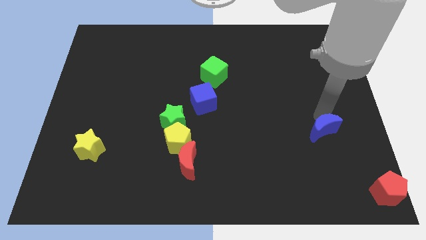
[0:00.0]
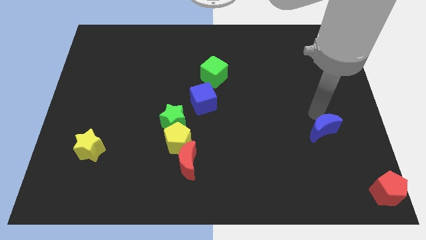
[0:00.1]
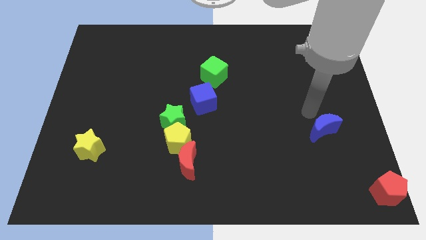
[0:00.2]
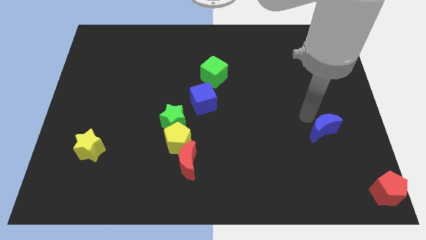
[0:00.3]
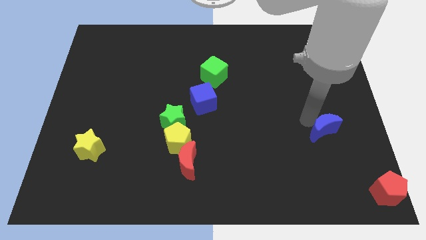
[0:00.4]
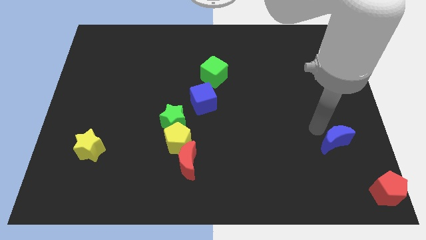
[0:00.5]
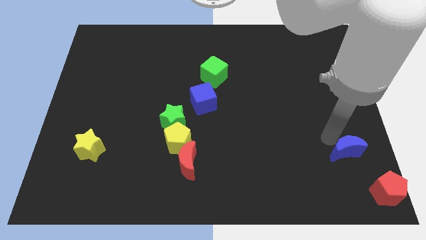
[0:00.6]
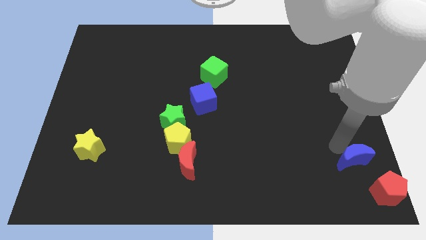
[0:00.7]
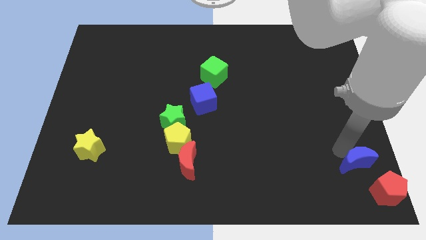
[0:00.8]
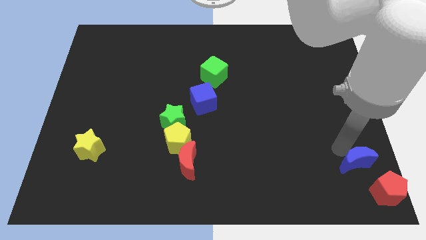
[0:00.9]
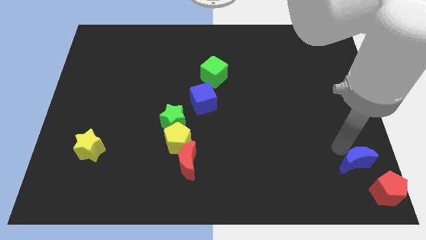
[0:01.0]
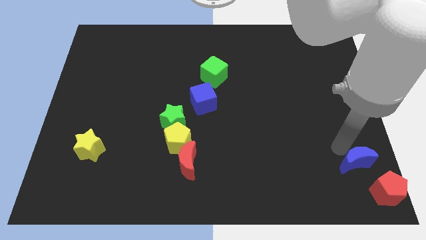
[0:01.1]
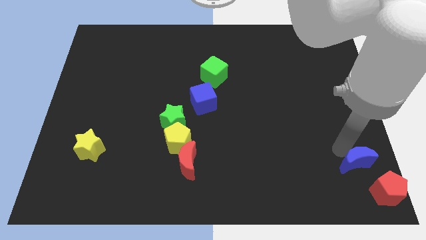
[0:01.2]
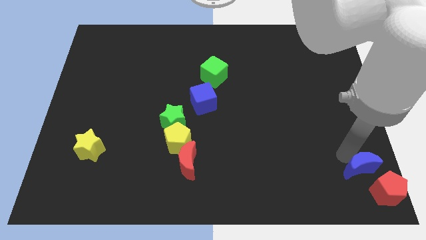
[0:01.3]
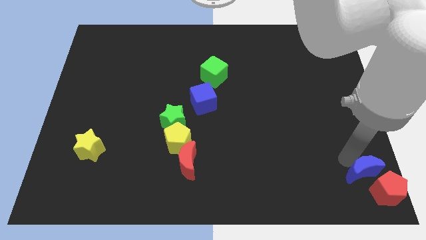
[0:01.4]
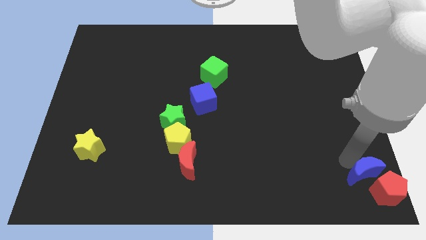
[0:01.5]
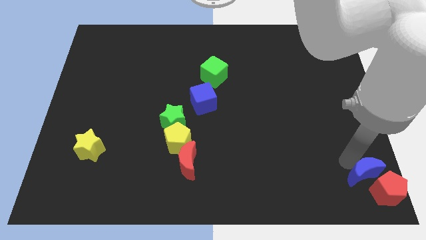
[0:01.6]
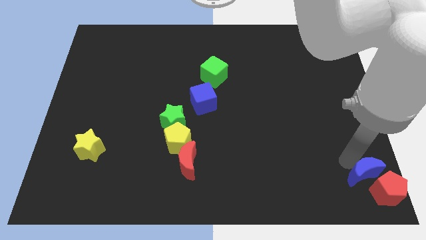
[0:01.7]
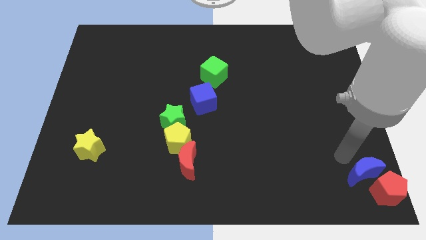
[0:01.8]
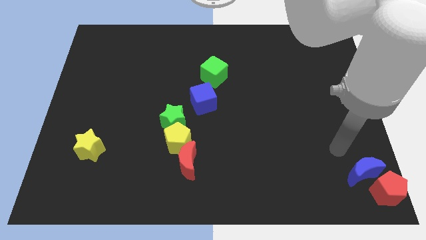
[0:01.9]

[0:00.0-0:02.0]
slide the blue moon close to the red pentagon

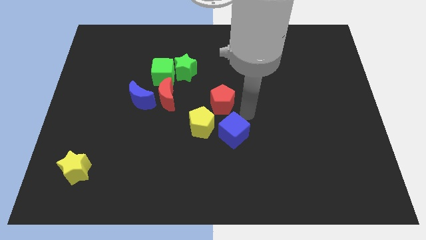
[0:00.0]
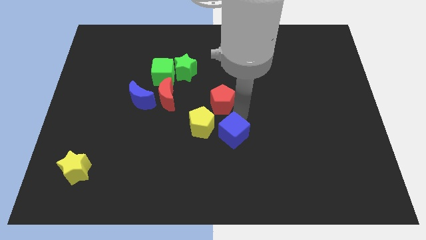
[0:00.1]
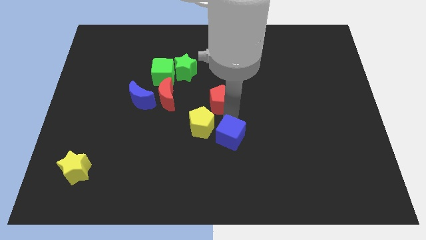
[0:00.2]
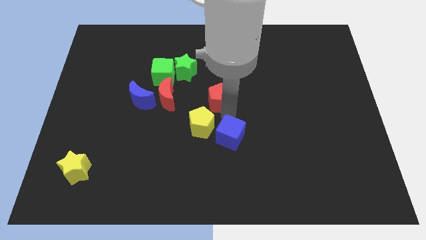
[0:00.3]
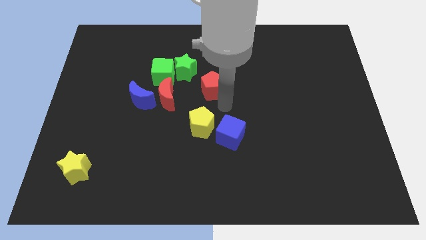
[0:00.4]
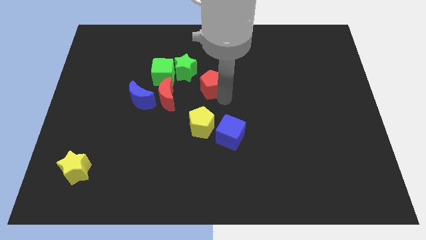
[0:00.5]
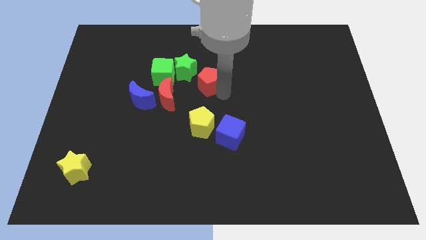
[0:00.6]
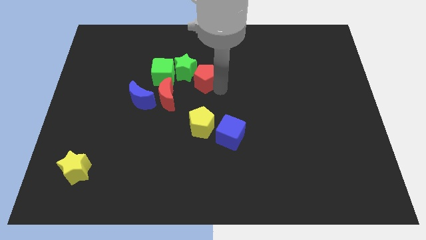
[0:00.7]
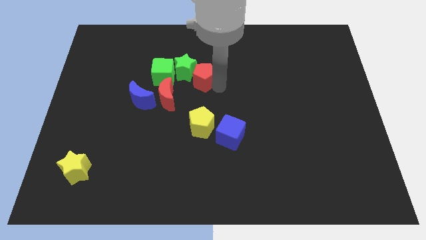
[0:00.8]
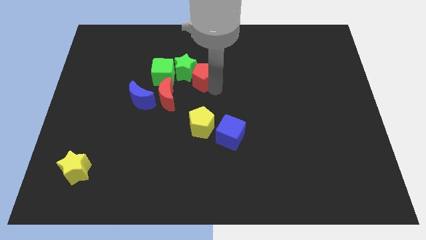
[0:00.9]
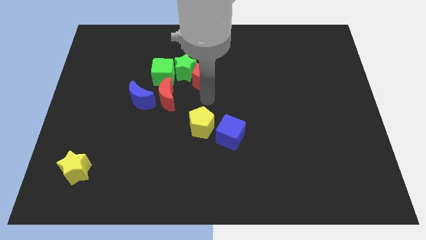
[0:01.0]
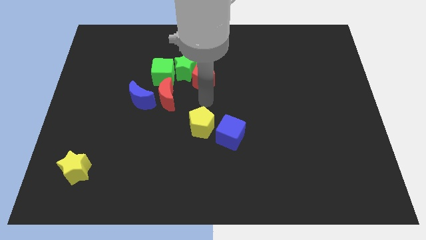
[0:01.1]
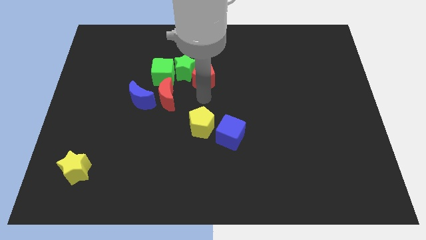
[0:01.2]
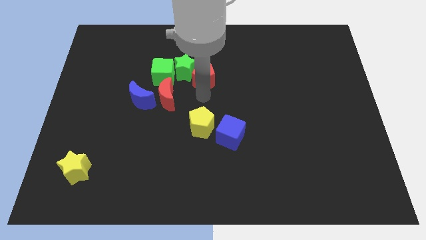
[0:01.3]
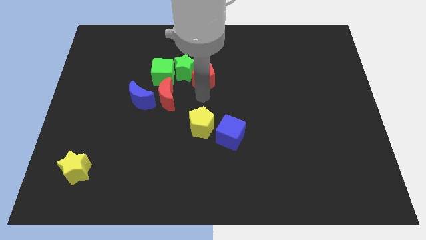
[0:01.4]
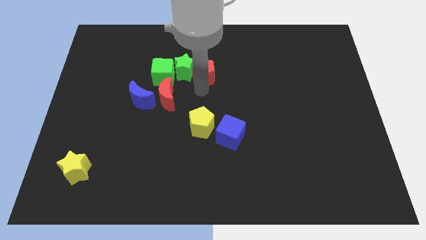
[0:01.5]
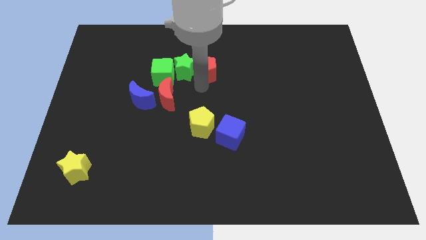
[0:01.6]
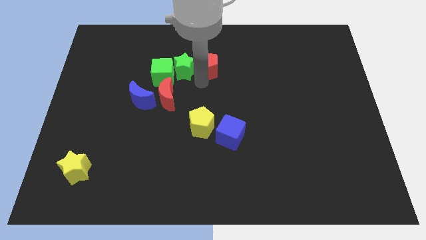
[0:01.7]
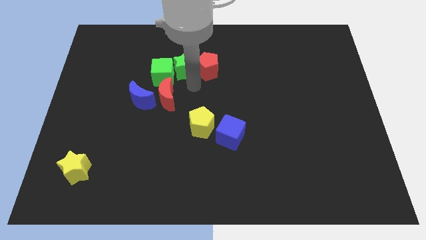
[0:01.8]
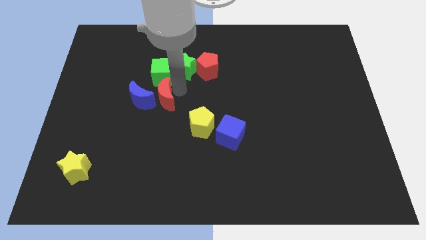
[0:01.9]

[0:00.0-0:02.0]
make the red pentagon to touch the right side of the green star

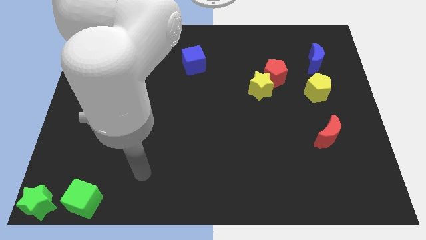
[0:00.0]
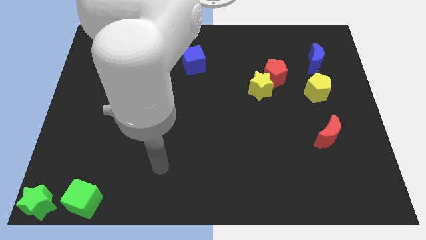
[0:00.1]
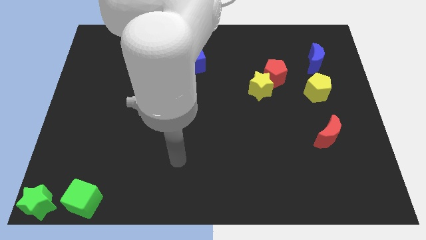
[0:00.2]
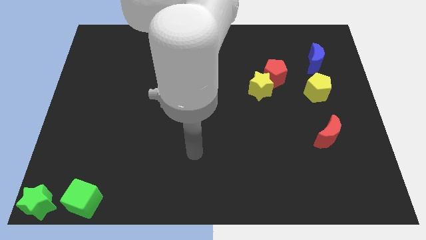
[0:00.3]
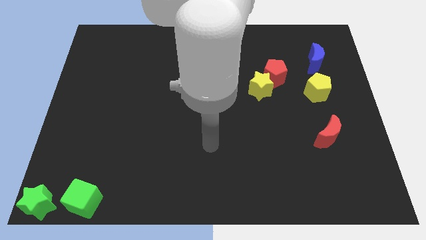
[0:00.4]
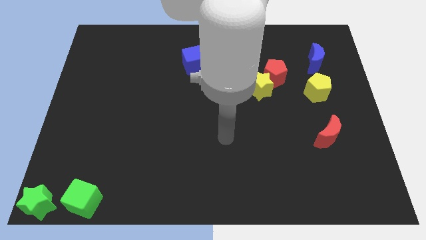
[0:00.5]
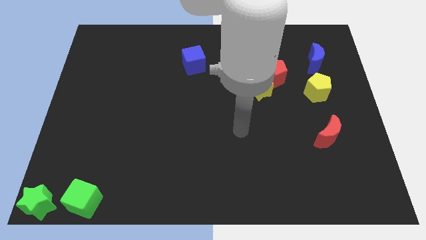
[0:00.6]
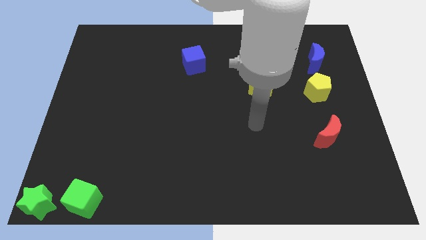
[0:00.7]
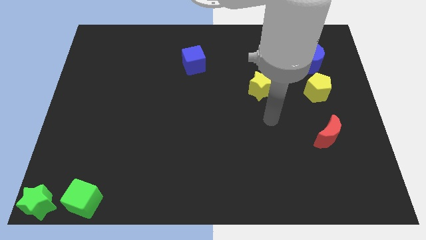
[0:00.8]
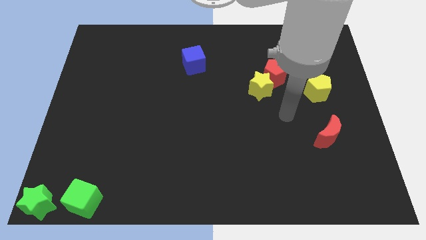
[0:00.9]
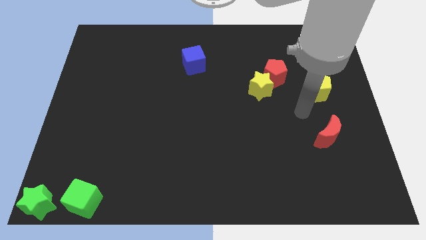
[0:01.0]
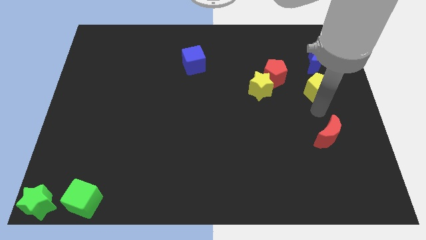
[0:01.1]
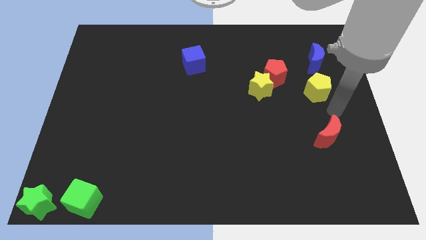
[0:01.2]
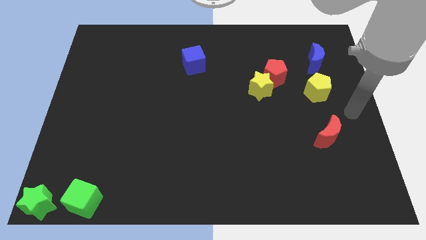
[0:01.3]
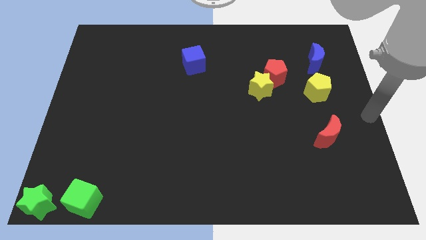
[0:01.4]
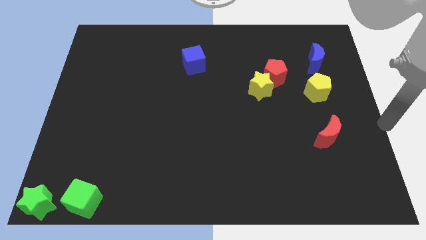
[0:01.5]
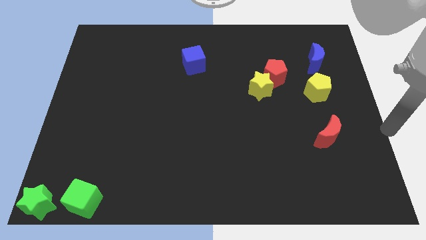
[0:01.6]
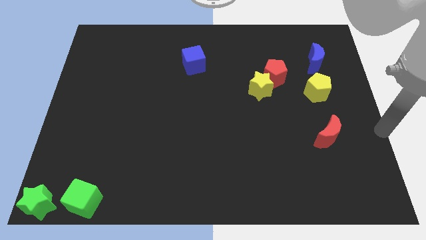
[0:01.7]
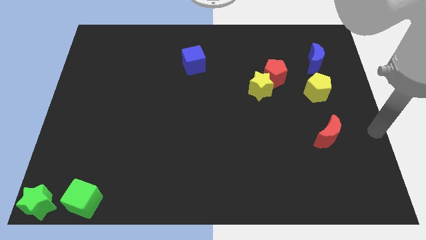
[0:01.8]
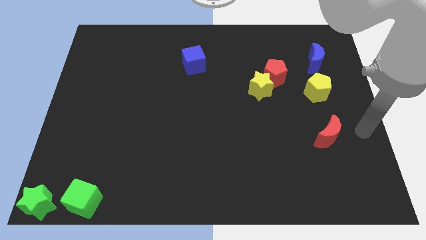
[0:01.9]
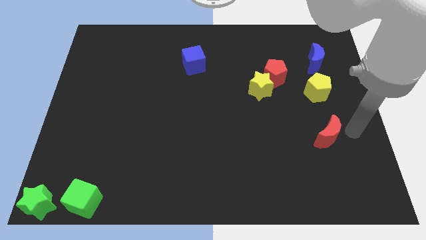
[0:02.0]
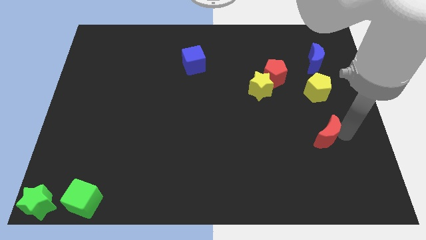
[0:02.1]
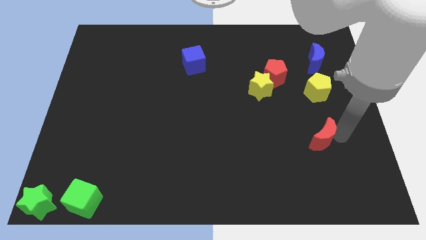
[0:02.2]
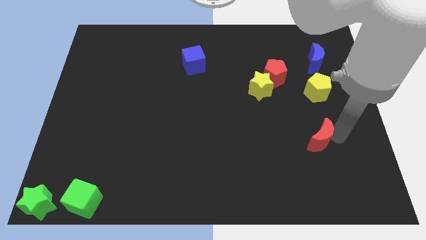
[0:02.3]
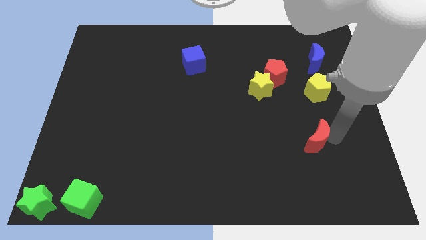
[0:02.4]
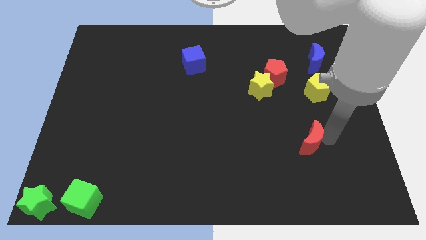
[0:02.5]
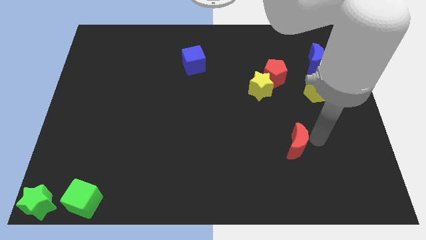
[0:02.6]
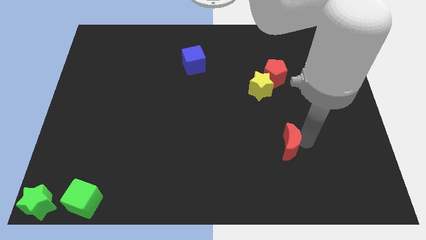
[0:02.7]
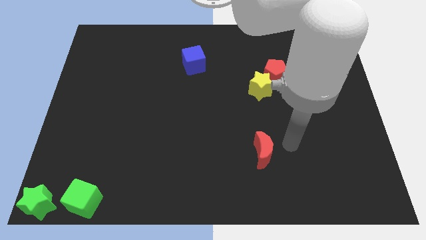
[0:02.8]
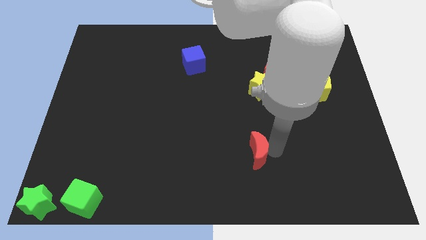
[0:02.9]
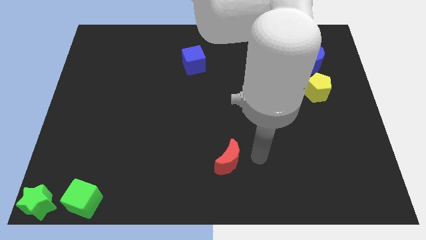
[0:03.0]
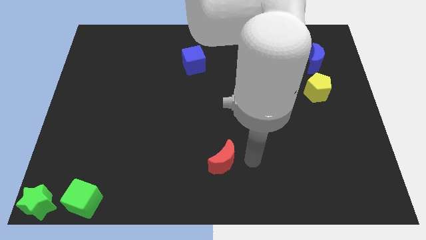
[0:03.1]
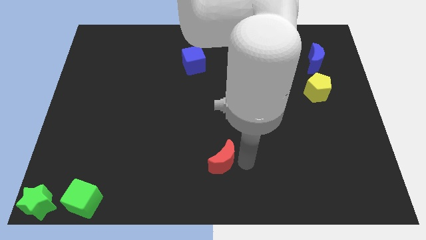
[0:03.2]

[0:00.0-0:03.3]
slide the red moon to the left side of the table

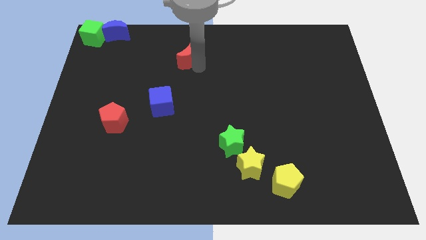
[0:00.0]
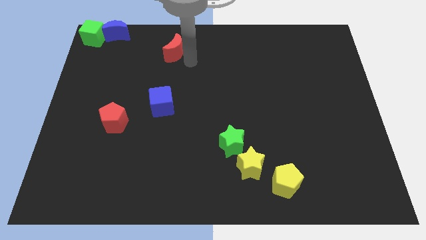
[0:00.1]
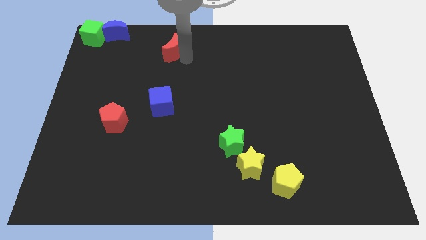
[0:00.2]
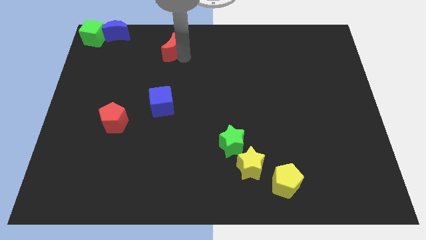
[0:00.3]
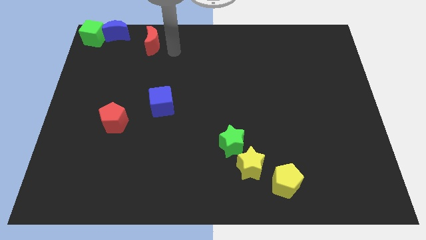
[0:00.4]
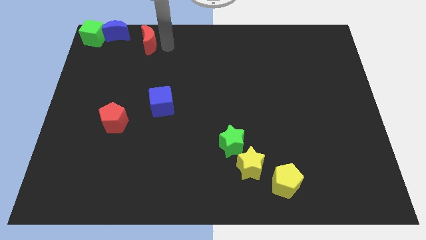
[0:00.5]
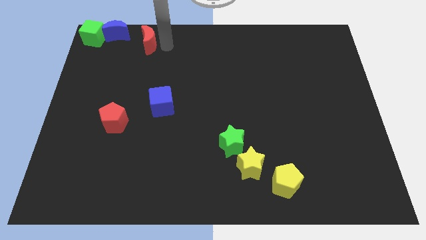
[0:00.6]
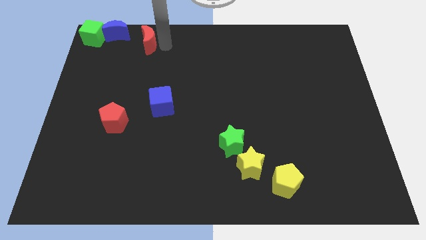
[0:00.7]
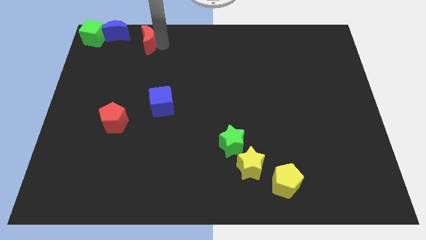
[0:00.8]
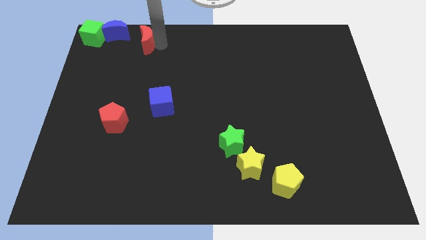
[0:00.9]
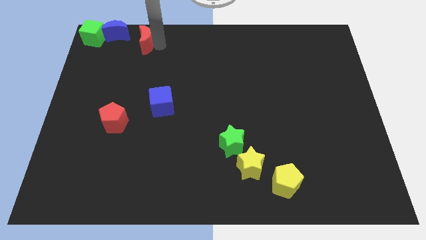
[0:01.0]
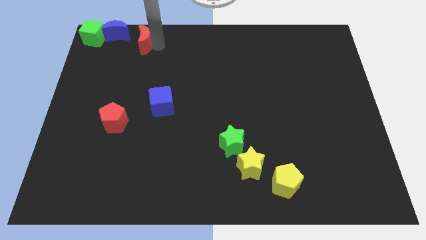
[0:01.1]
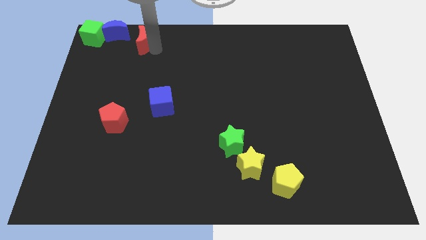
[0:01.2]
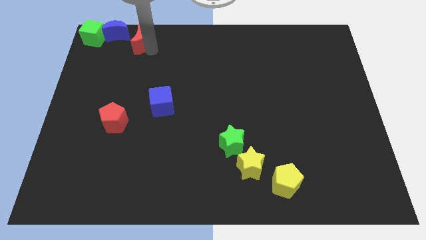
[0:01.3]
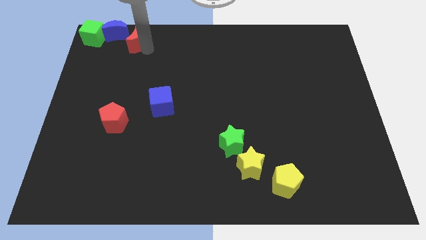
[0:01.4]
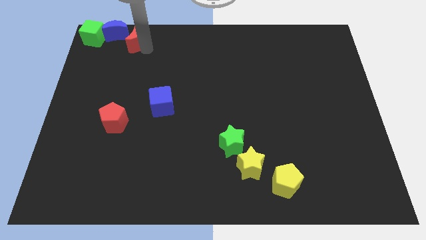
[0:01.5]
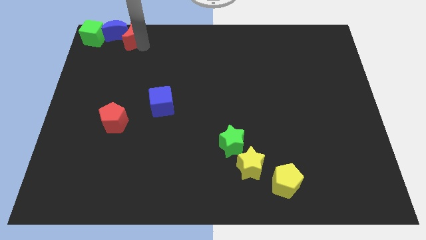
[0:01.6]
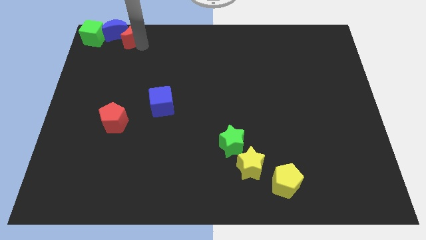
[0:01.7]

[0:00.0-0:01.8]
push the red crescent into the blue crescent
